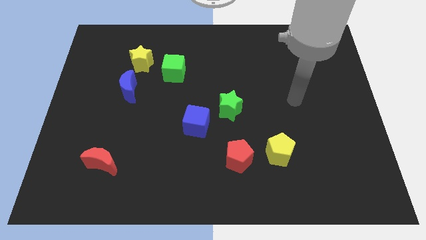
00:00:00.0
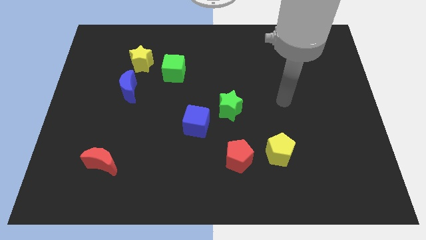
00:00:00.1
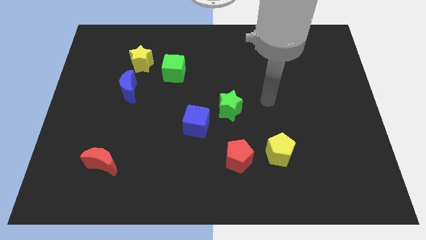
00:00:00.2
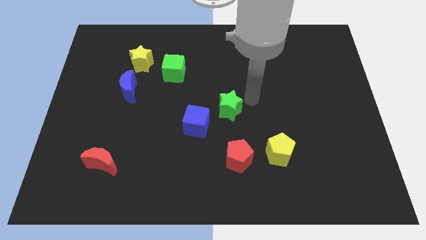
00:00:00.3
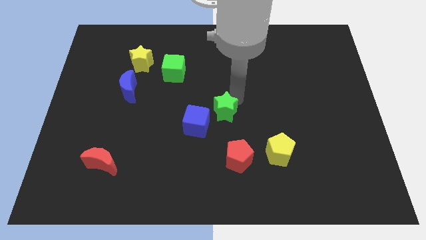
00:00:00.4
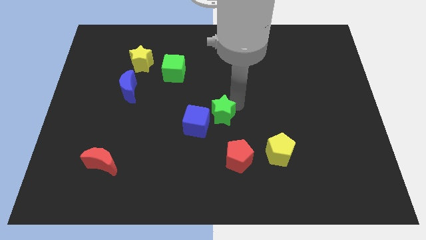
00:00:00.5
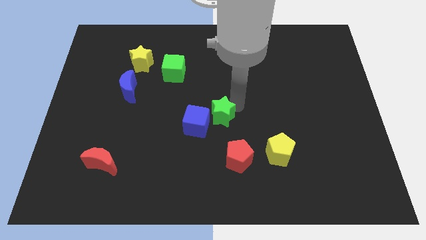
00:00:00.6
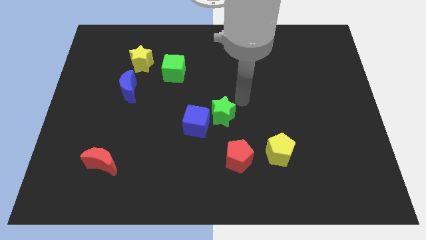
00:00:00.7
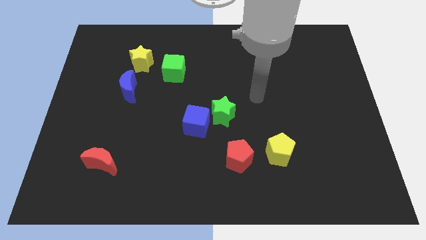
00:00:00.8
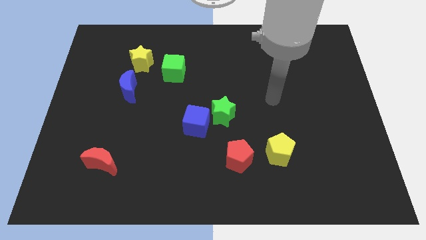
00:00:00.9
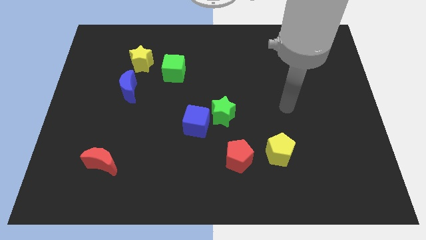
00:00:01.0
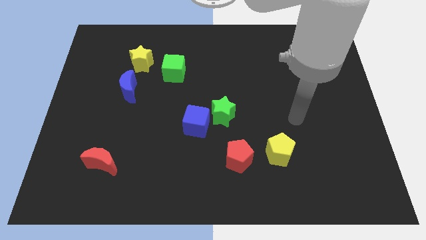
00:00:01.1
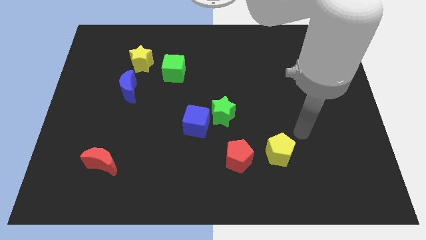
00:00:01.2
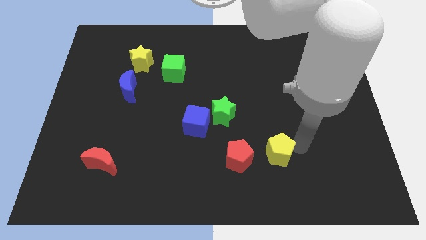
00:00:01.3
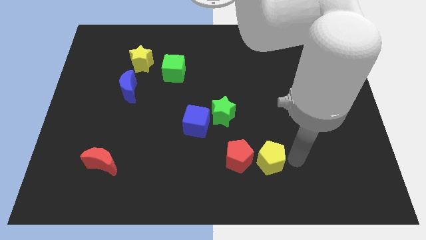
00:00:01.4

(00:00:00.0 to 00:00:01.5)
move your arm close to the right side of the yellow pentagon

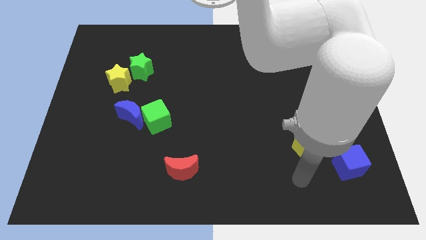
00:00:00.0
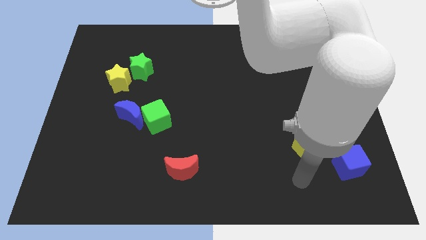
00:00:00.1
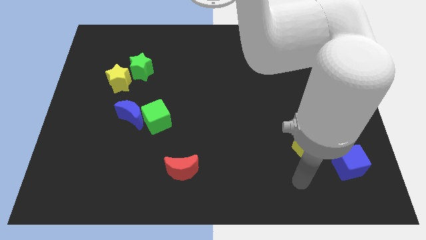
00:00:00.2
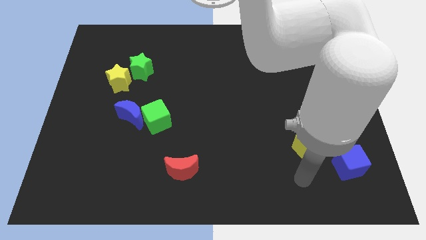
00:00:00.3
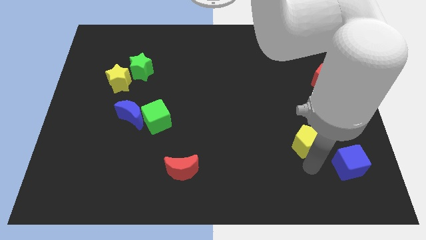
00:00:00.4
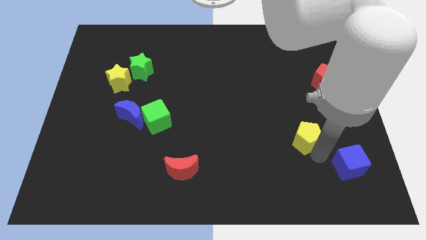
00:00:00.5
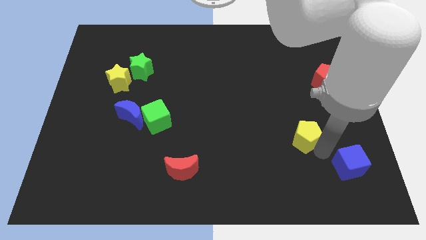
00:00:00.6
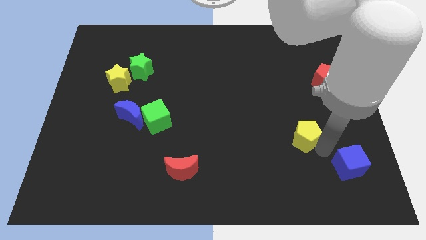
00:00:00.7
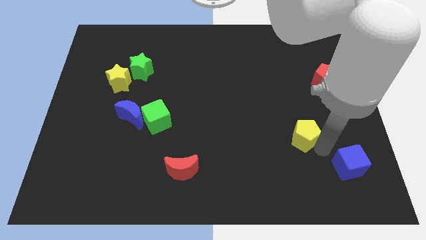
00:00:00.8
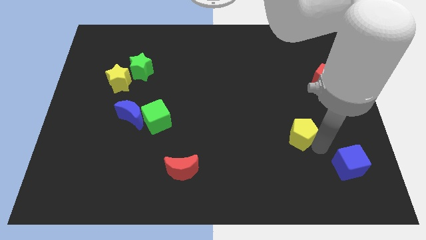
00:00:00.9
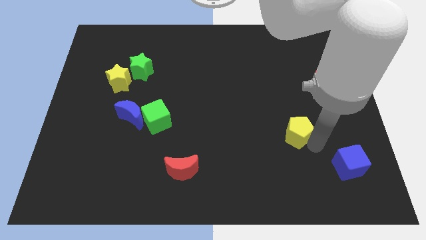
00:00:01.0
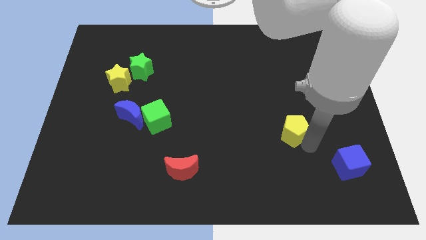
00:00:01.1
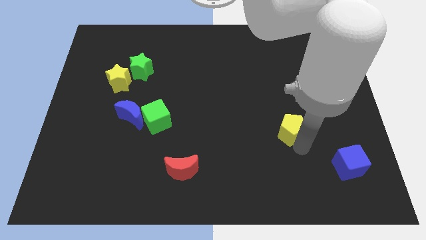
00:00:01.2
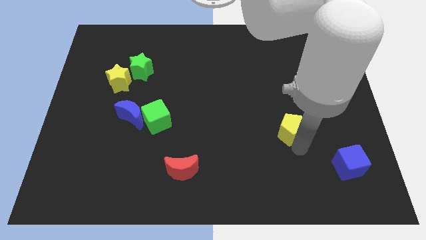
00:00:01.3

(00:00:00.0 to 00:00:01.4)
move the yellow pentagon slightly towards the center of the board

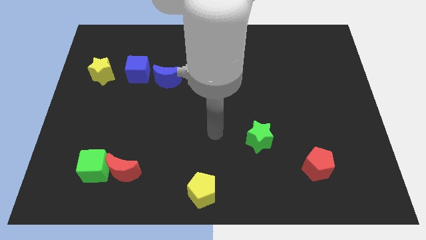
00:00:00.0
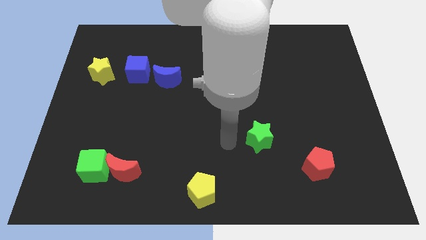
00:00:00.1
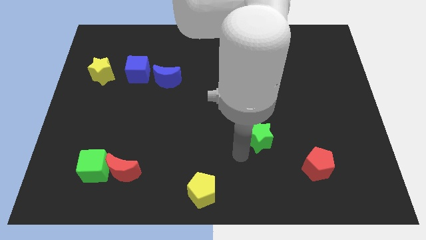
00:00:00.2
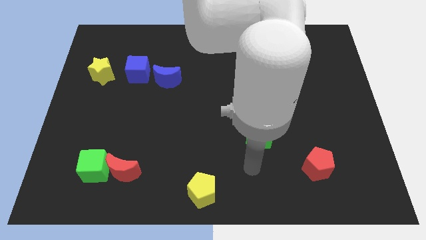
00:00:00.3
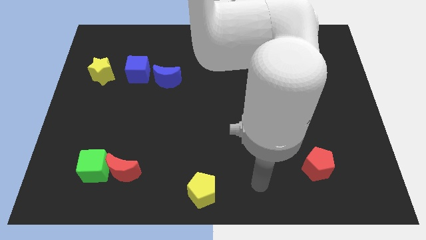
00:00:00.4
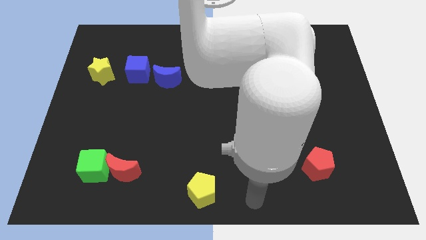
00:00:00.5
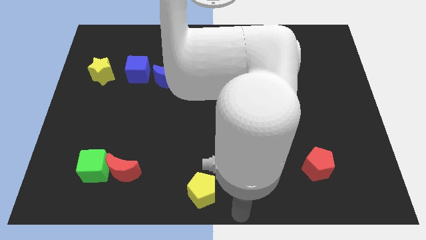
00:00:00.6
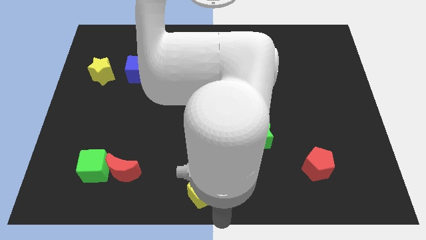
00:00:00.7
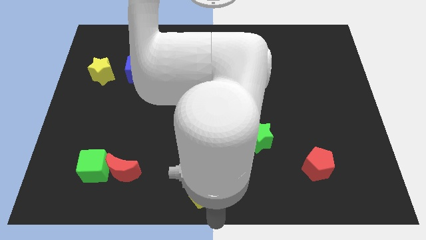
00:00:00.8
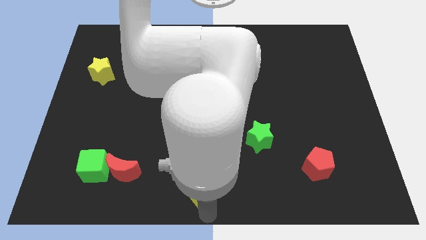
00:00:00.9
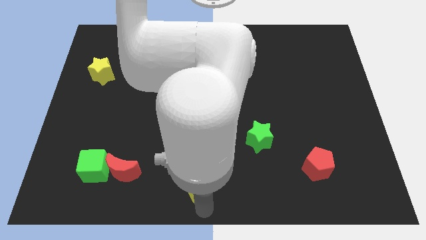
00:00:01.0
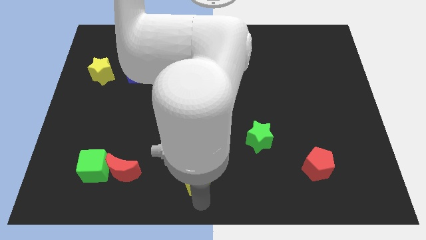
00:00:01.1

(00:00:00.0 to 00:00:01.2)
move the arm towards the yellow pentagon

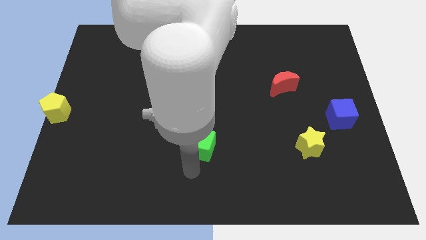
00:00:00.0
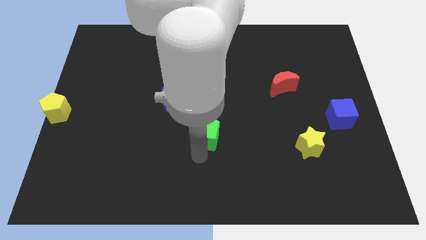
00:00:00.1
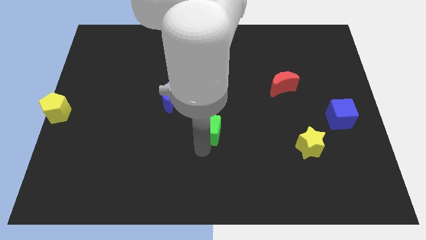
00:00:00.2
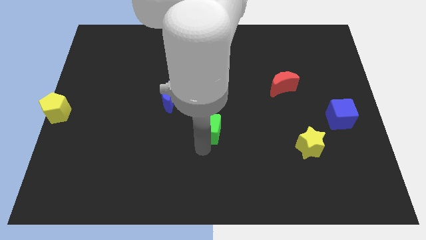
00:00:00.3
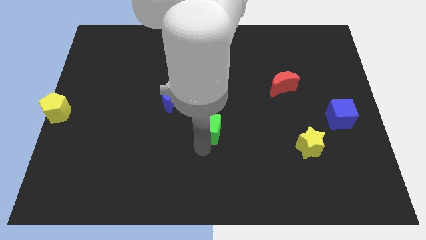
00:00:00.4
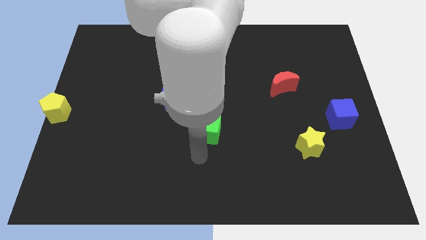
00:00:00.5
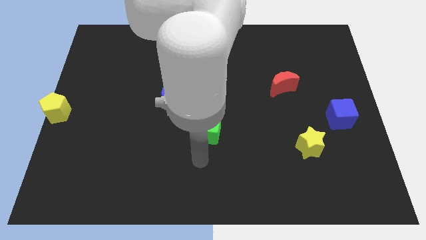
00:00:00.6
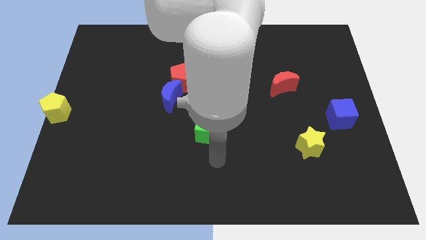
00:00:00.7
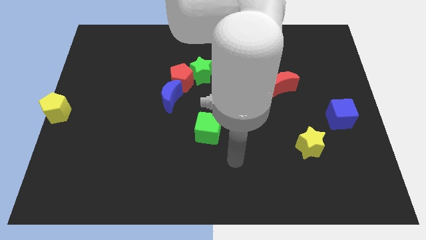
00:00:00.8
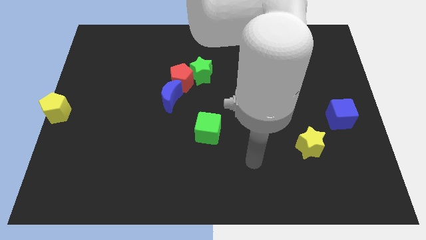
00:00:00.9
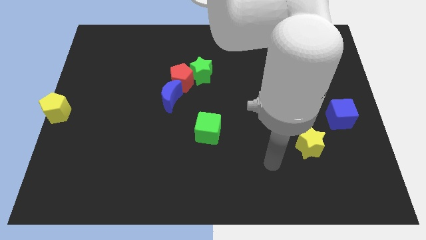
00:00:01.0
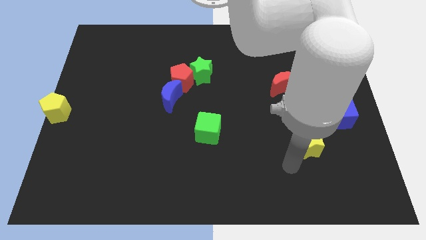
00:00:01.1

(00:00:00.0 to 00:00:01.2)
place the green cube at the center of the board

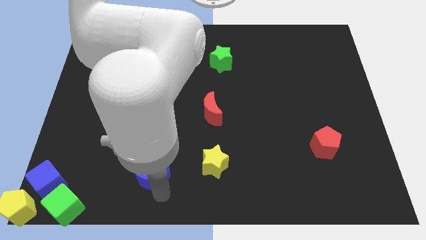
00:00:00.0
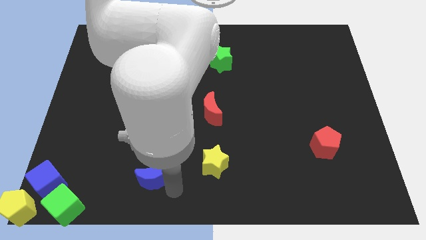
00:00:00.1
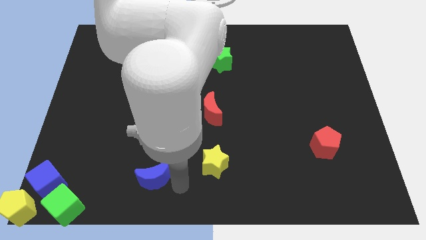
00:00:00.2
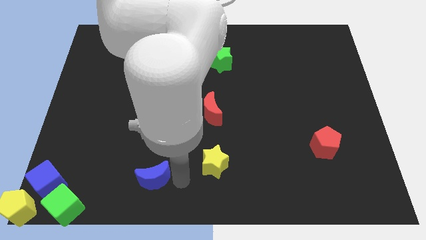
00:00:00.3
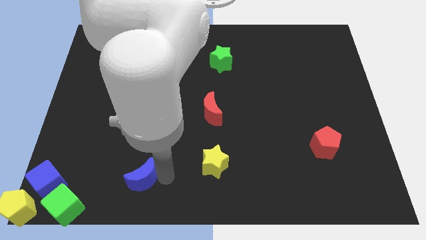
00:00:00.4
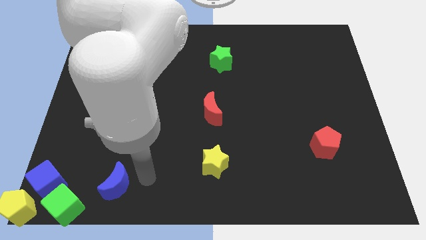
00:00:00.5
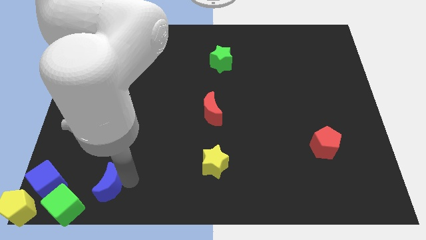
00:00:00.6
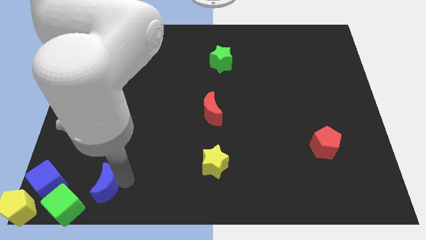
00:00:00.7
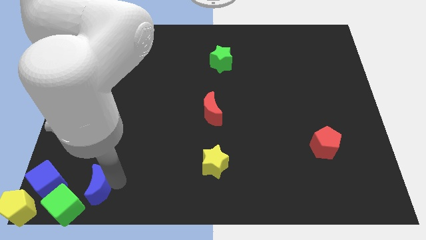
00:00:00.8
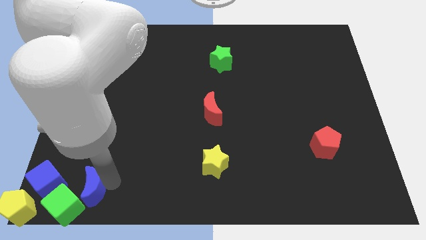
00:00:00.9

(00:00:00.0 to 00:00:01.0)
move blue crescent towards green cube

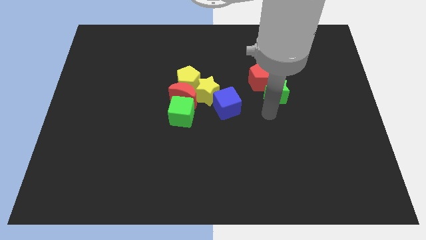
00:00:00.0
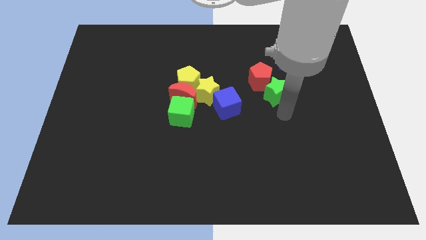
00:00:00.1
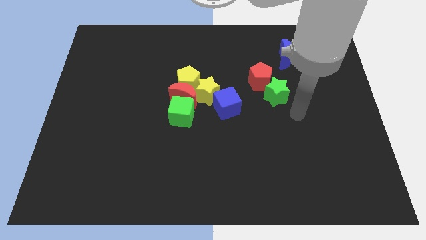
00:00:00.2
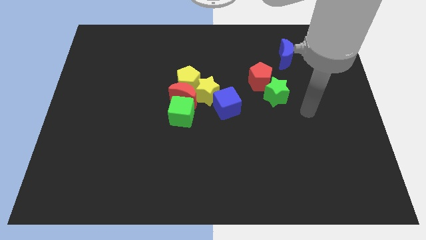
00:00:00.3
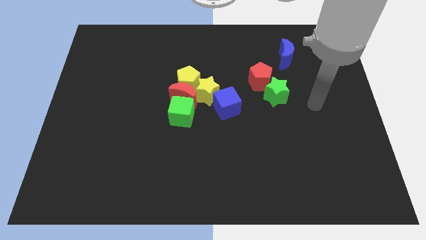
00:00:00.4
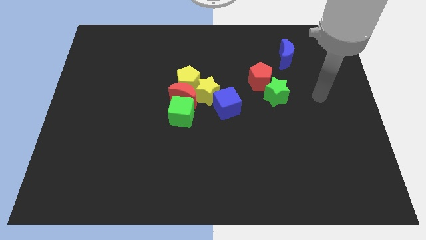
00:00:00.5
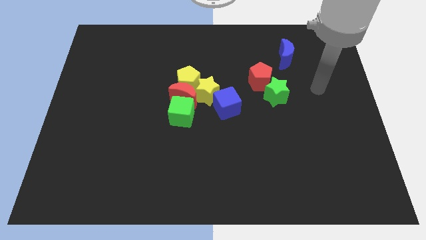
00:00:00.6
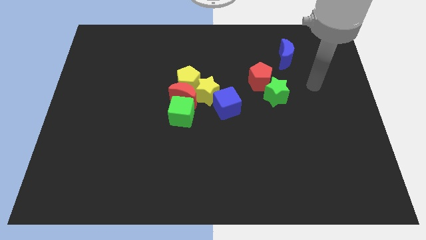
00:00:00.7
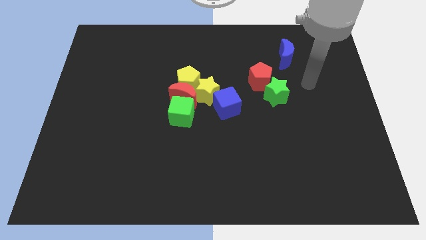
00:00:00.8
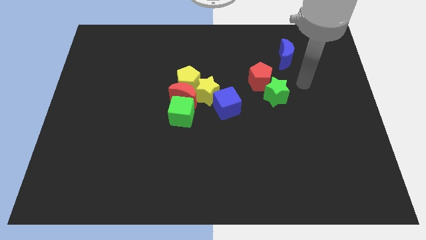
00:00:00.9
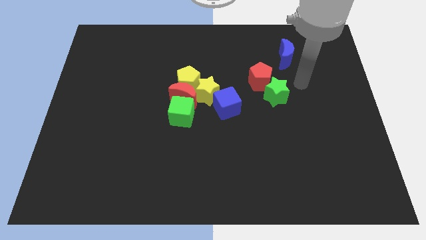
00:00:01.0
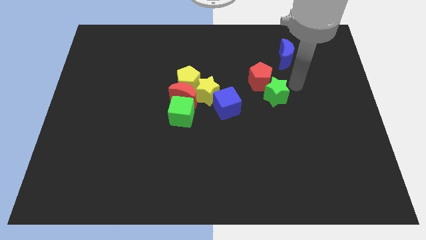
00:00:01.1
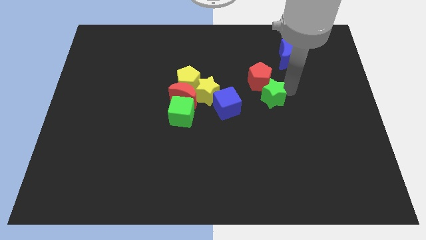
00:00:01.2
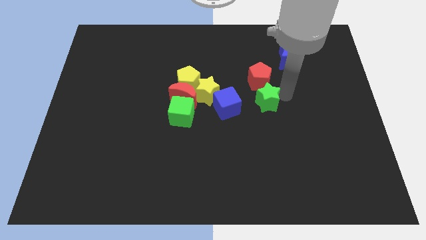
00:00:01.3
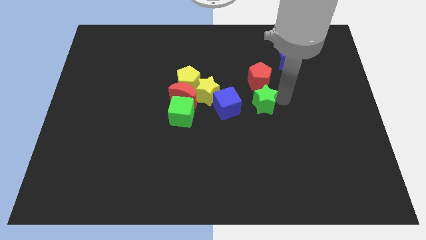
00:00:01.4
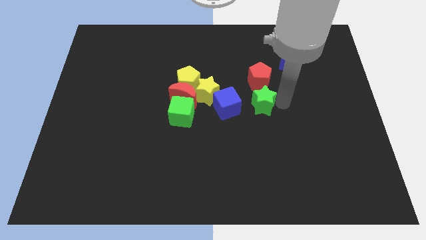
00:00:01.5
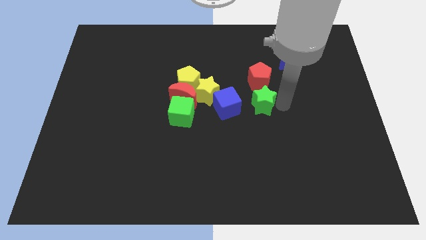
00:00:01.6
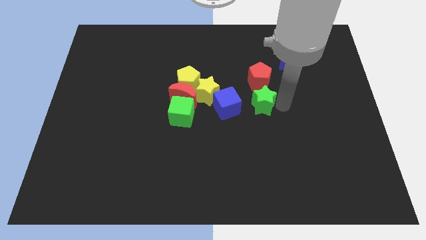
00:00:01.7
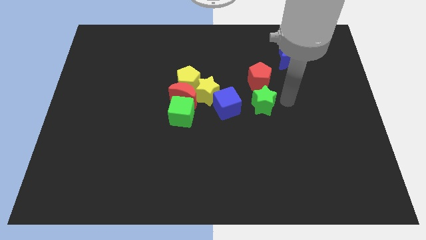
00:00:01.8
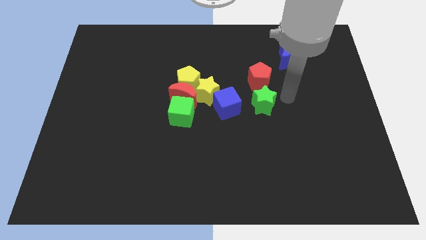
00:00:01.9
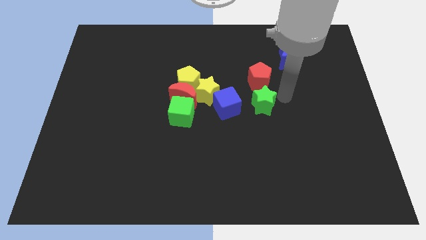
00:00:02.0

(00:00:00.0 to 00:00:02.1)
push the green star below to the red pentagon

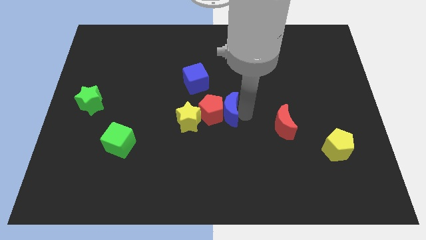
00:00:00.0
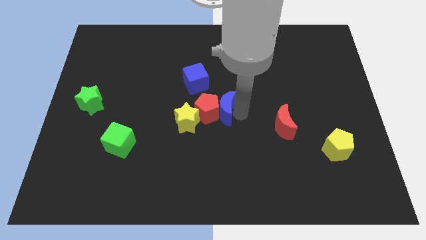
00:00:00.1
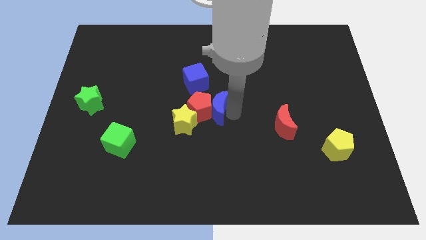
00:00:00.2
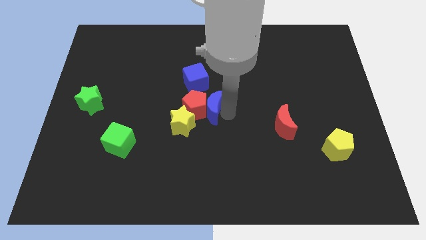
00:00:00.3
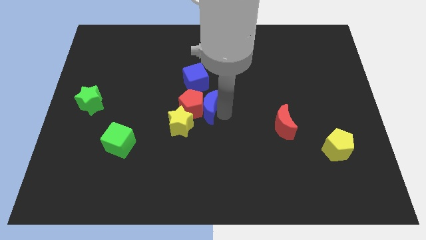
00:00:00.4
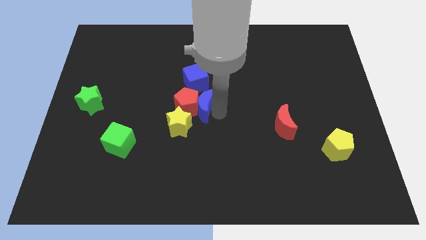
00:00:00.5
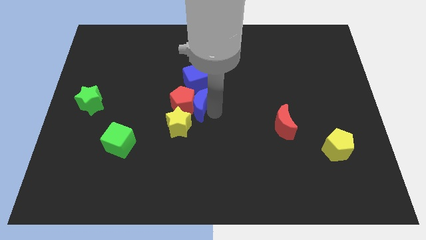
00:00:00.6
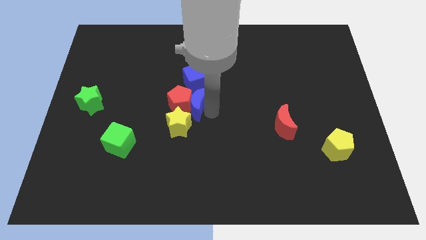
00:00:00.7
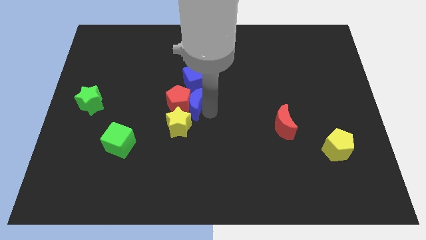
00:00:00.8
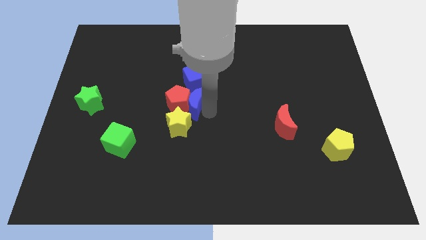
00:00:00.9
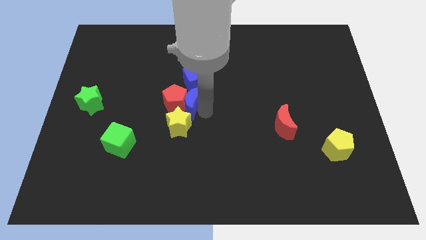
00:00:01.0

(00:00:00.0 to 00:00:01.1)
move the blue crescent to the bottom of the blue cube
